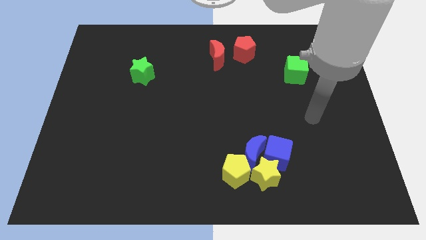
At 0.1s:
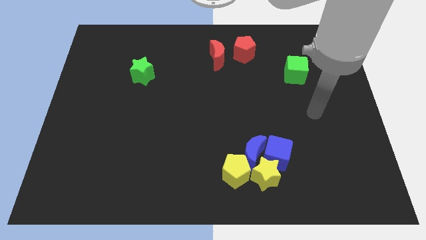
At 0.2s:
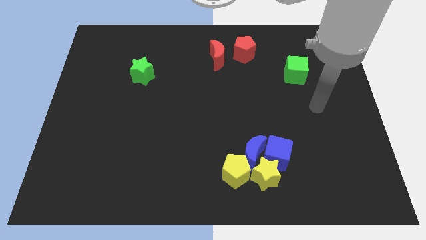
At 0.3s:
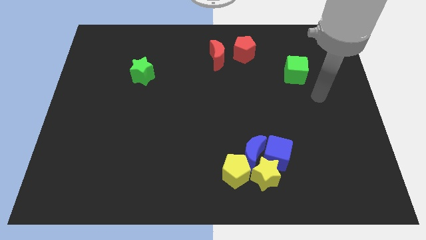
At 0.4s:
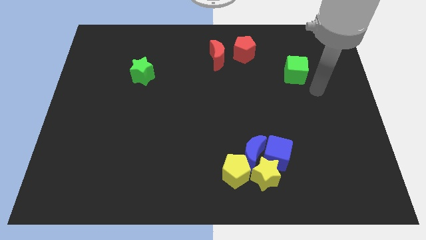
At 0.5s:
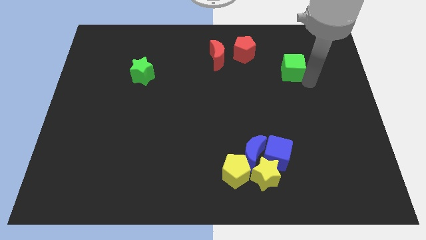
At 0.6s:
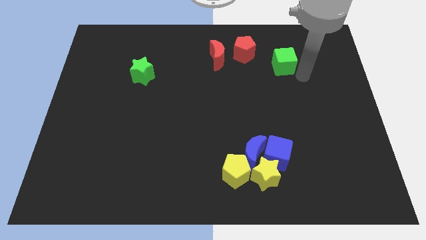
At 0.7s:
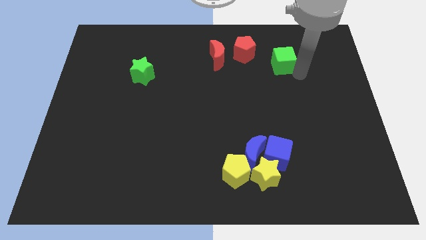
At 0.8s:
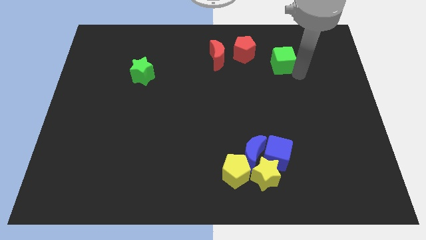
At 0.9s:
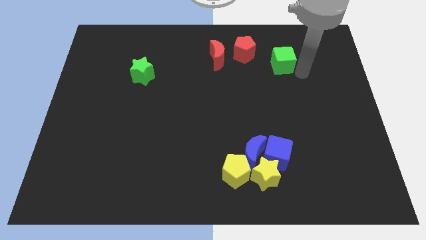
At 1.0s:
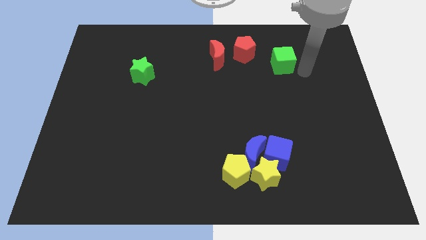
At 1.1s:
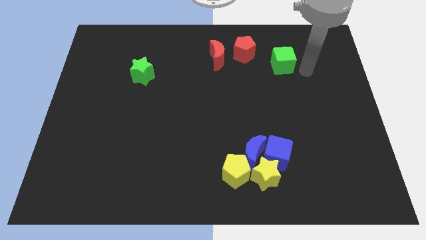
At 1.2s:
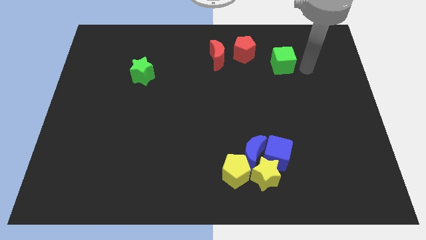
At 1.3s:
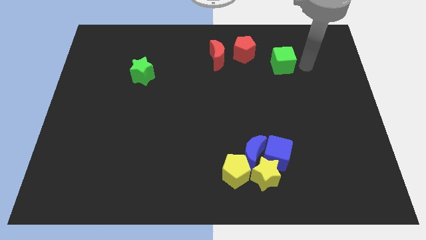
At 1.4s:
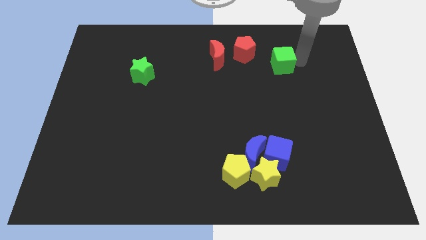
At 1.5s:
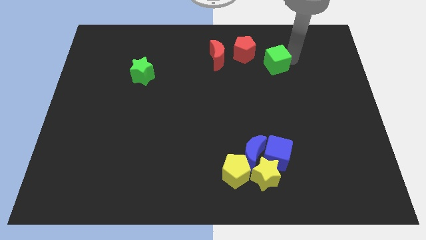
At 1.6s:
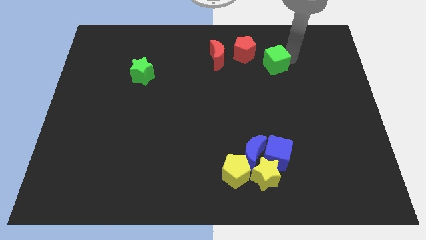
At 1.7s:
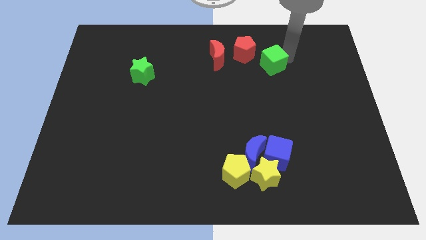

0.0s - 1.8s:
move the green cube near to the red pentagon

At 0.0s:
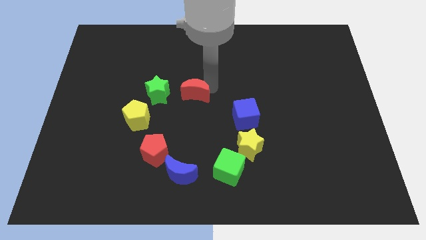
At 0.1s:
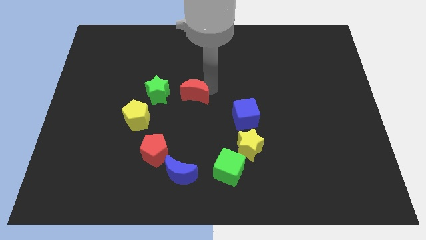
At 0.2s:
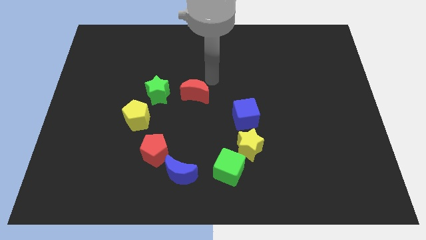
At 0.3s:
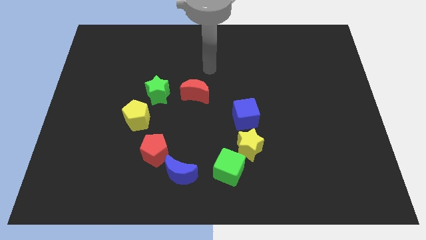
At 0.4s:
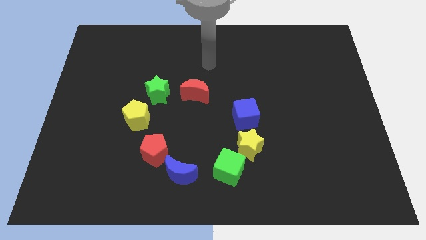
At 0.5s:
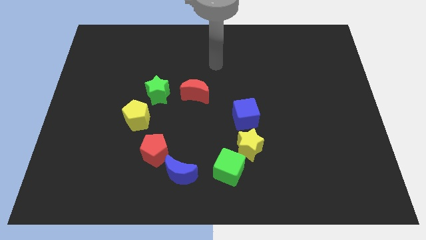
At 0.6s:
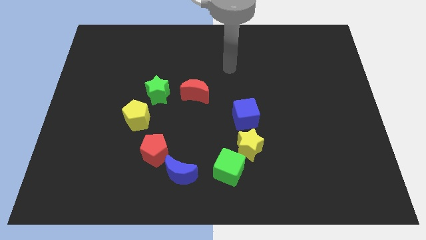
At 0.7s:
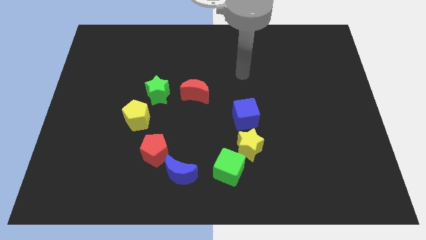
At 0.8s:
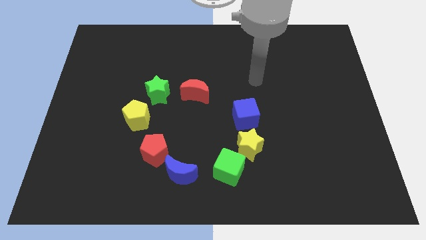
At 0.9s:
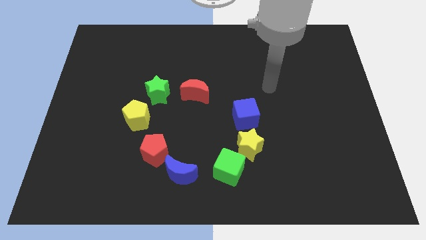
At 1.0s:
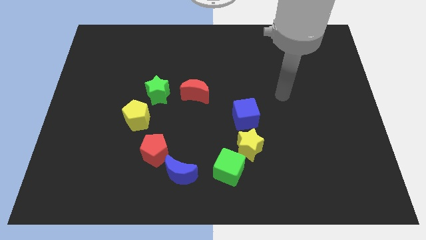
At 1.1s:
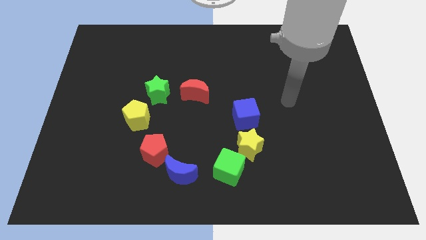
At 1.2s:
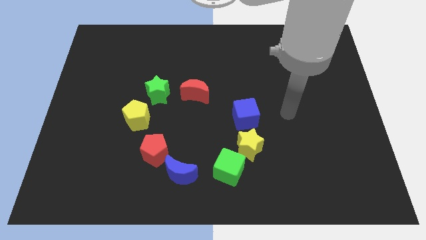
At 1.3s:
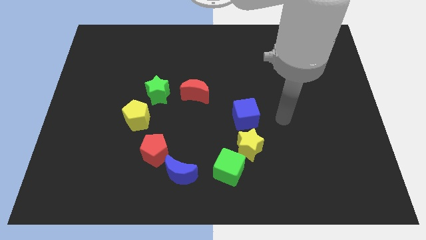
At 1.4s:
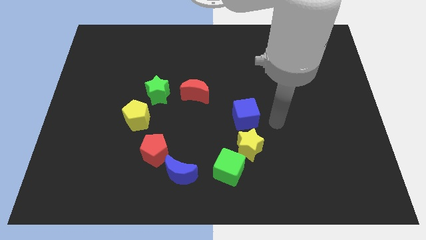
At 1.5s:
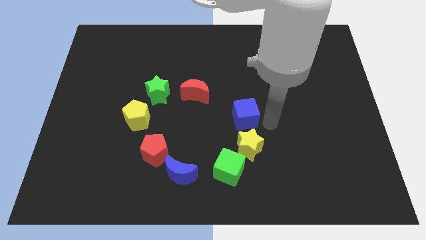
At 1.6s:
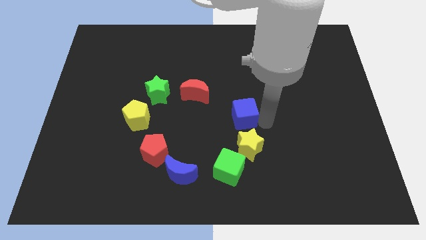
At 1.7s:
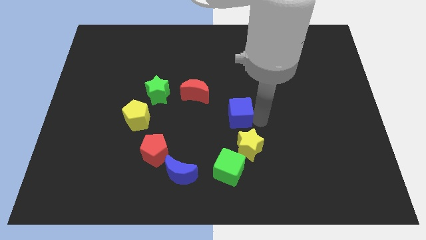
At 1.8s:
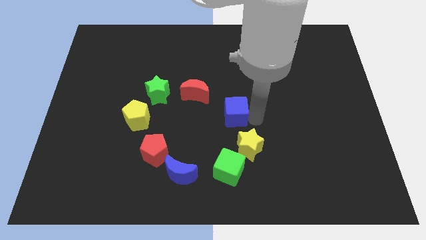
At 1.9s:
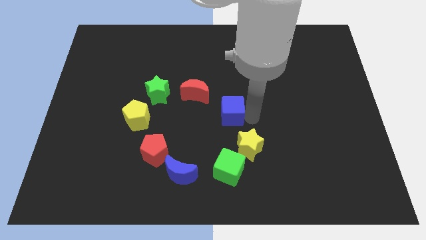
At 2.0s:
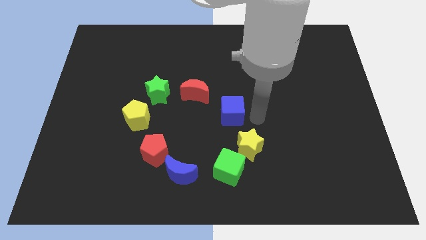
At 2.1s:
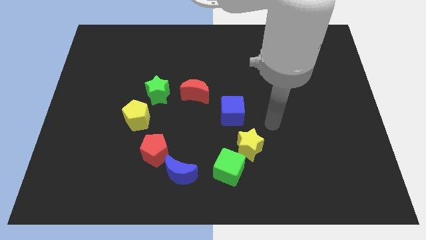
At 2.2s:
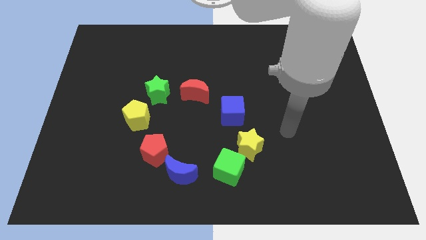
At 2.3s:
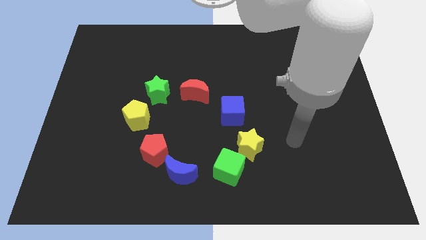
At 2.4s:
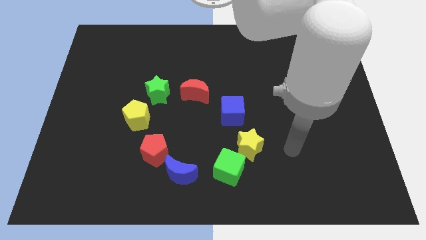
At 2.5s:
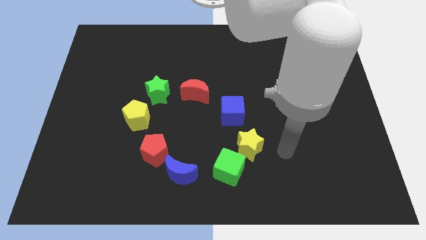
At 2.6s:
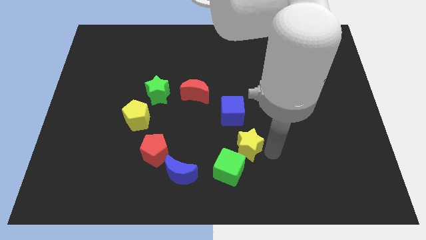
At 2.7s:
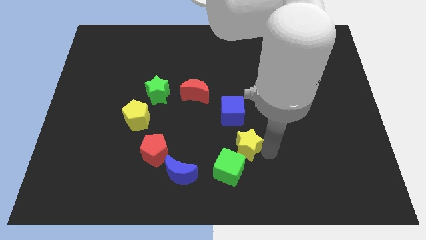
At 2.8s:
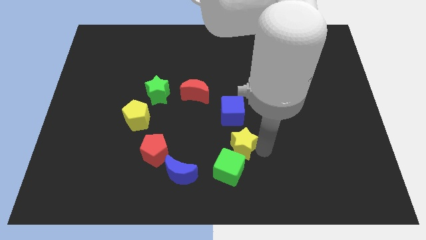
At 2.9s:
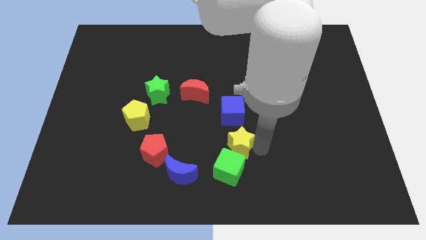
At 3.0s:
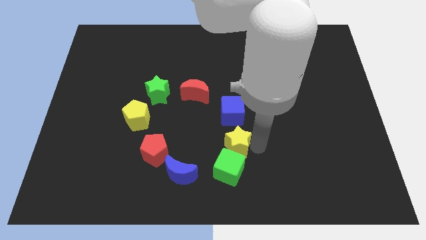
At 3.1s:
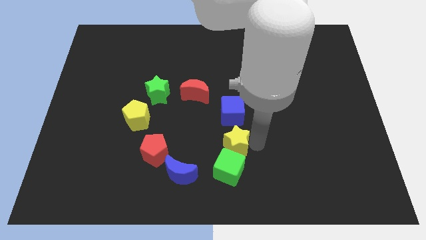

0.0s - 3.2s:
move your arm close to the yellow star

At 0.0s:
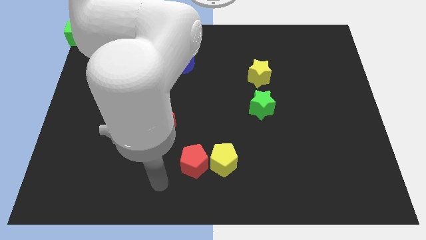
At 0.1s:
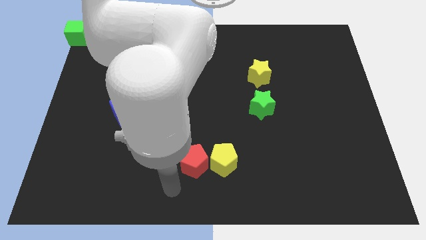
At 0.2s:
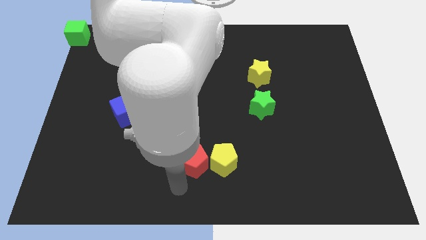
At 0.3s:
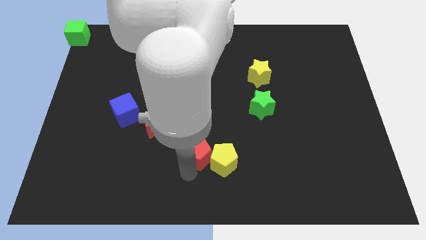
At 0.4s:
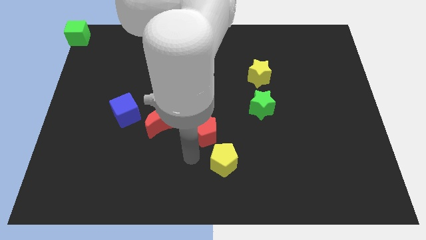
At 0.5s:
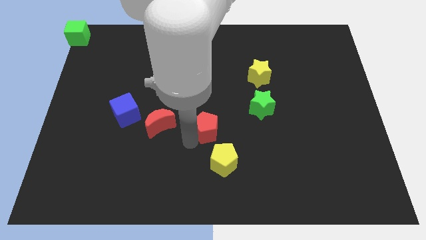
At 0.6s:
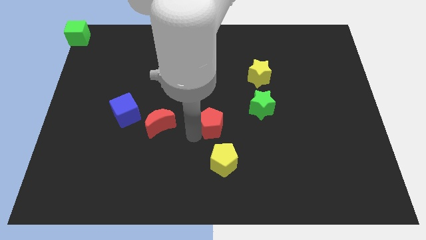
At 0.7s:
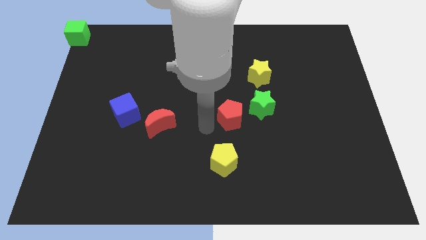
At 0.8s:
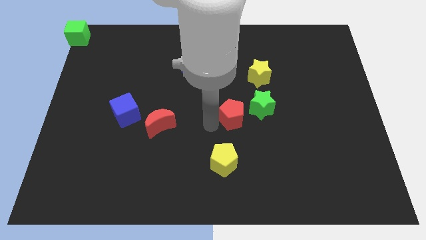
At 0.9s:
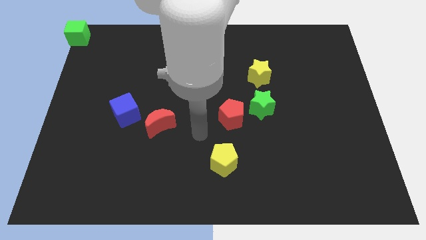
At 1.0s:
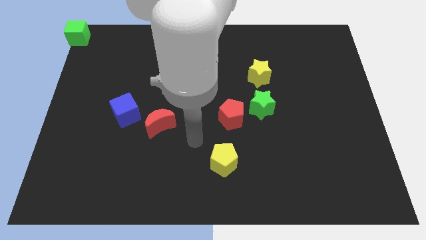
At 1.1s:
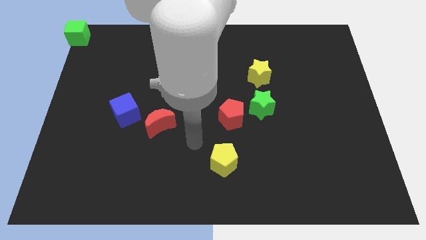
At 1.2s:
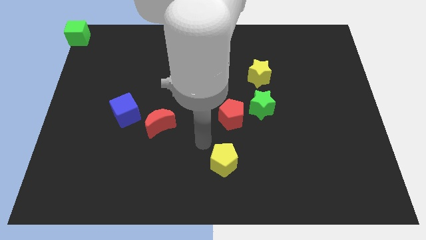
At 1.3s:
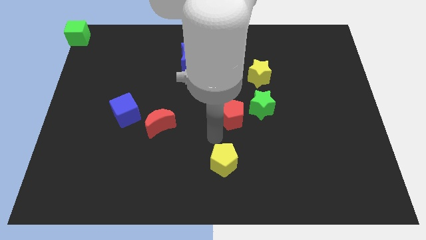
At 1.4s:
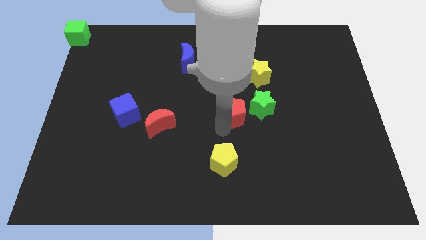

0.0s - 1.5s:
separate red pentagon and yellow pentagon

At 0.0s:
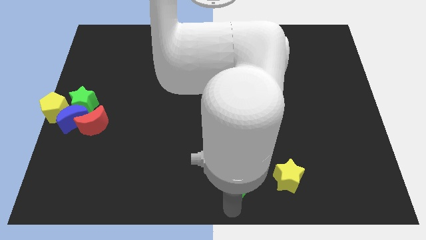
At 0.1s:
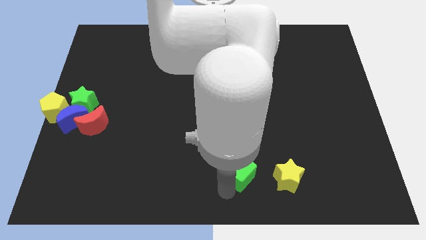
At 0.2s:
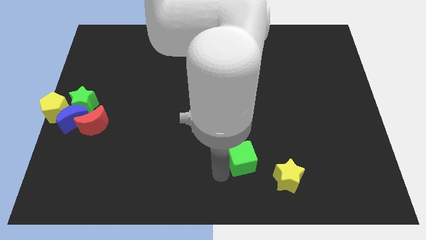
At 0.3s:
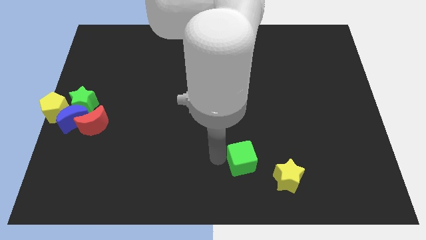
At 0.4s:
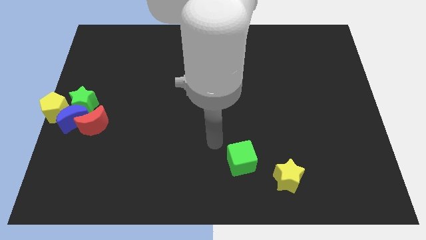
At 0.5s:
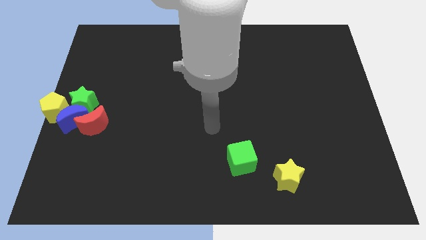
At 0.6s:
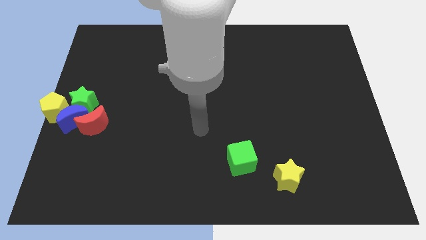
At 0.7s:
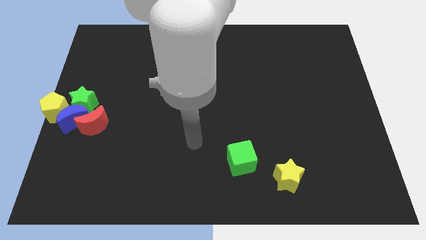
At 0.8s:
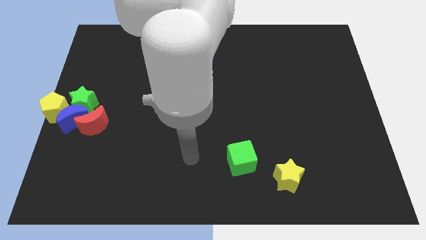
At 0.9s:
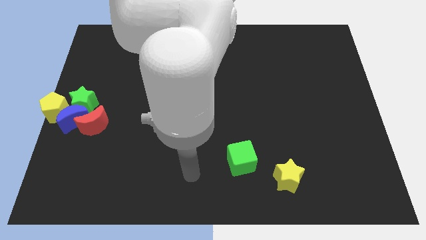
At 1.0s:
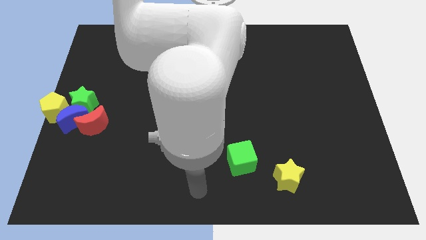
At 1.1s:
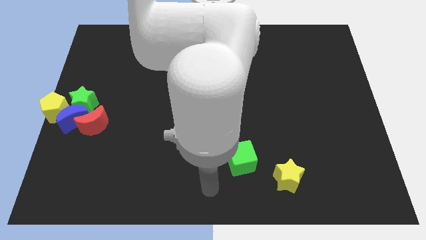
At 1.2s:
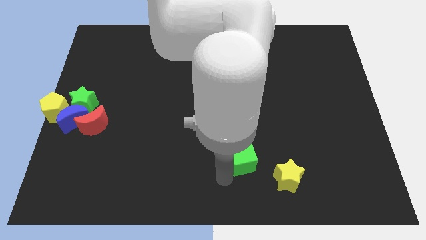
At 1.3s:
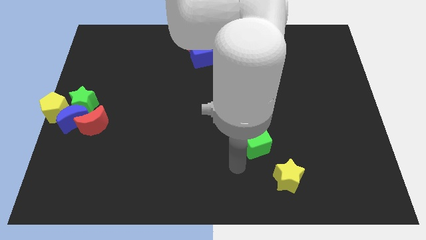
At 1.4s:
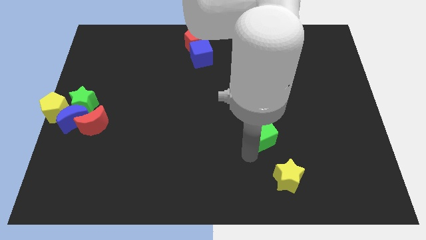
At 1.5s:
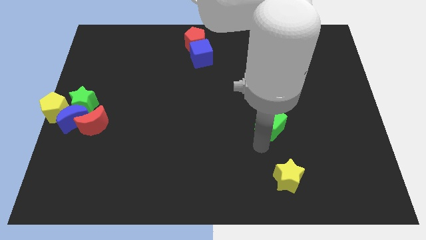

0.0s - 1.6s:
move the green cube above the yellow star

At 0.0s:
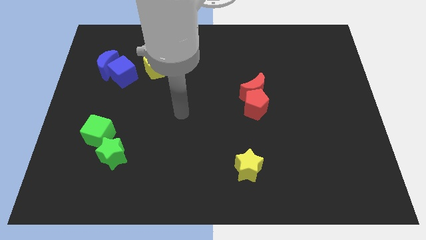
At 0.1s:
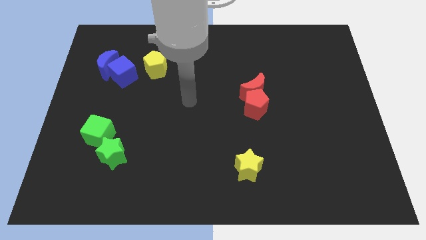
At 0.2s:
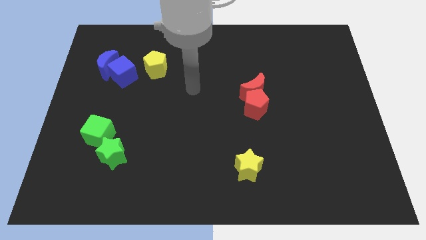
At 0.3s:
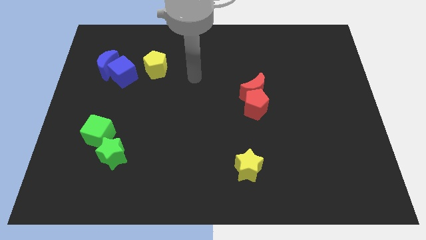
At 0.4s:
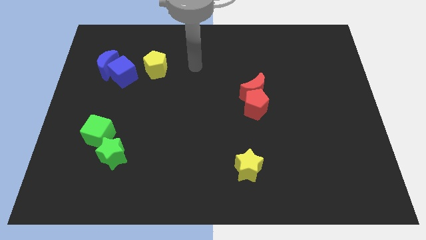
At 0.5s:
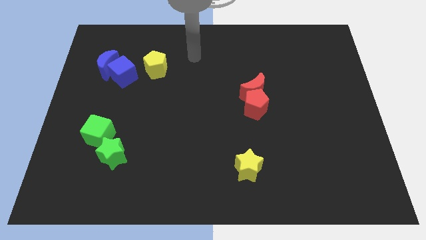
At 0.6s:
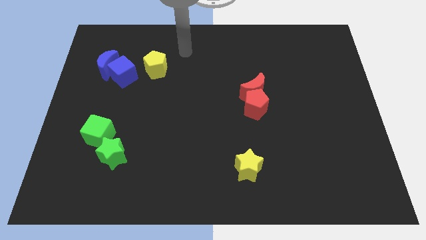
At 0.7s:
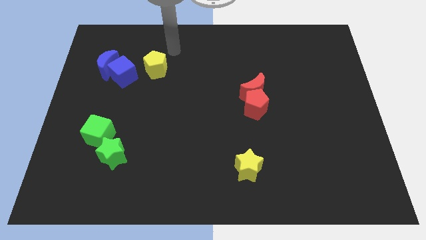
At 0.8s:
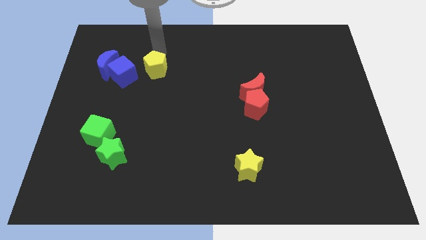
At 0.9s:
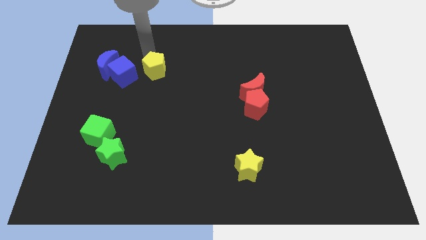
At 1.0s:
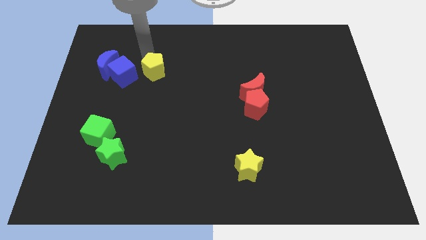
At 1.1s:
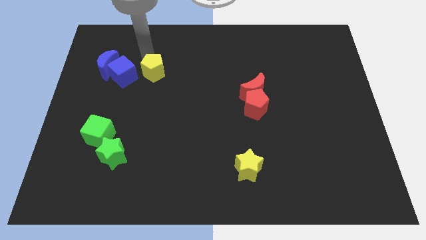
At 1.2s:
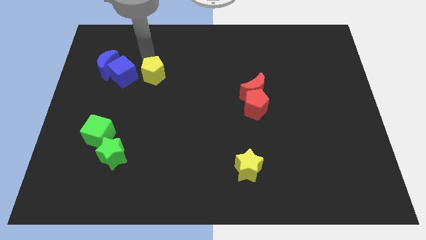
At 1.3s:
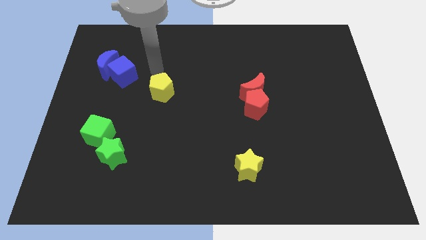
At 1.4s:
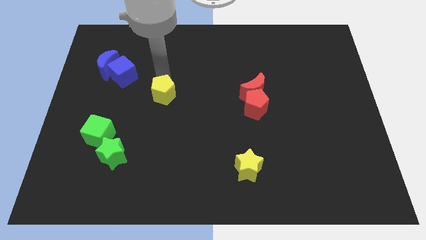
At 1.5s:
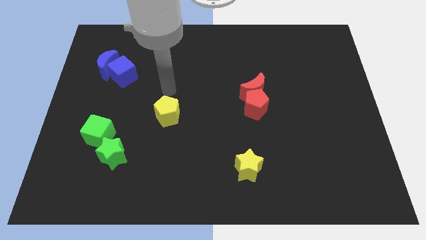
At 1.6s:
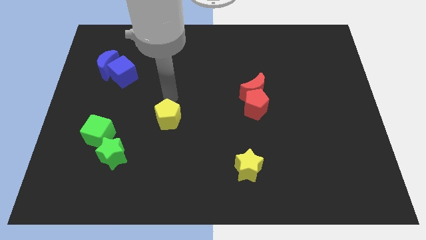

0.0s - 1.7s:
push the yellow pentagon towards bottom side
